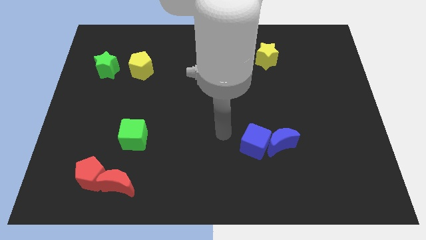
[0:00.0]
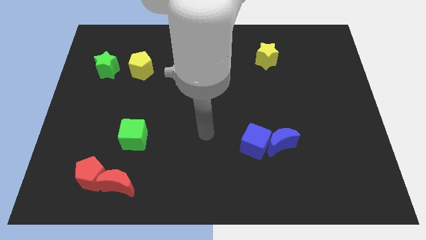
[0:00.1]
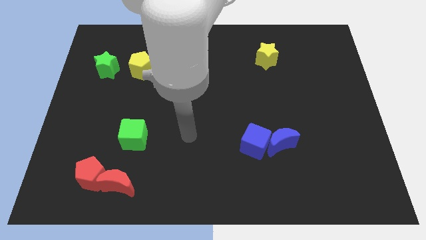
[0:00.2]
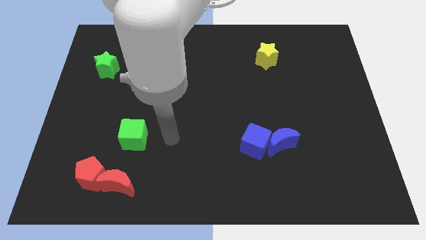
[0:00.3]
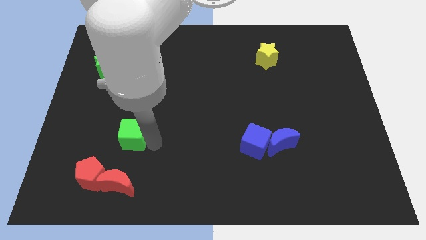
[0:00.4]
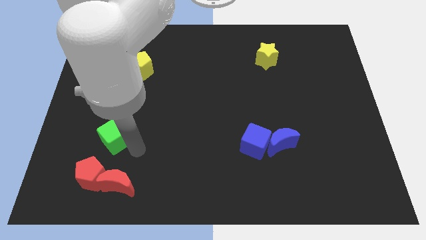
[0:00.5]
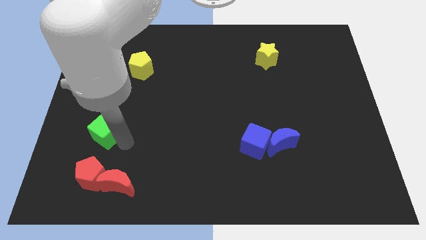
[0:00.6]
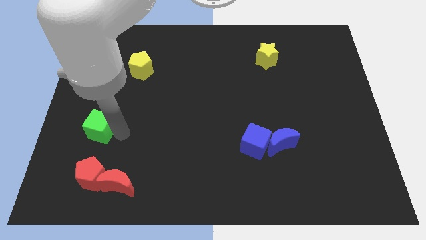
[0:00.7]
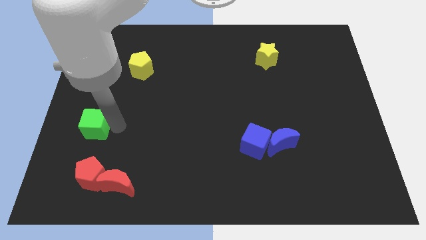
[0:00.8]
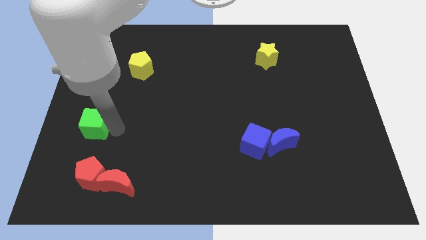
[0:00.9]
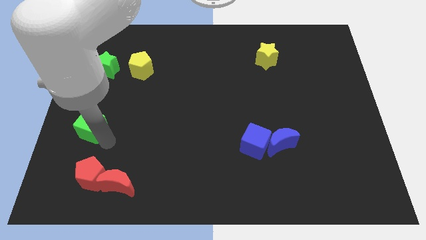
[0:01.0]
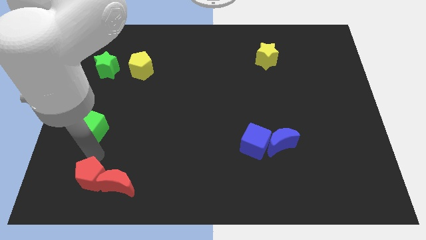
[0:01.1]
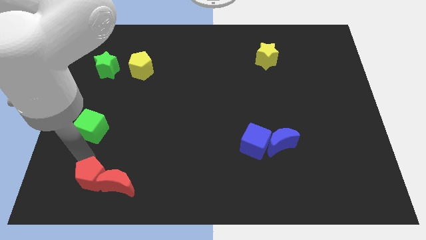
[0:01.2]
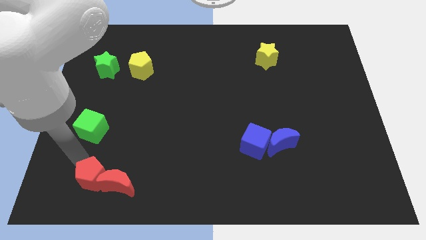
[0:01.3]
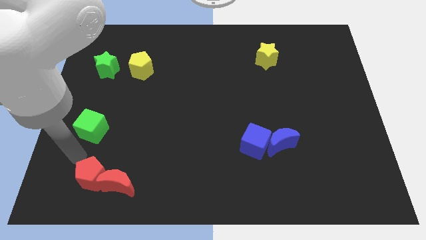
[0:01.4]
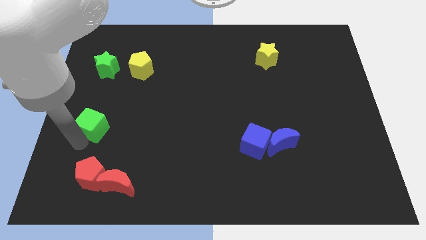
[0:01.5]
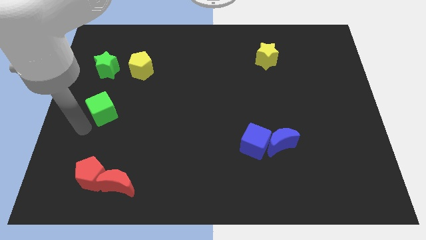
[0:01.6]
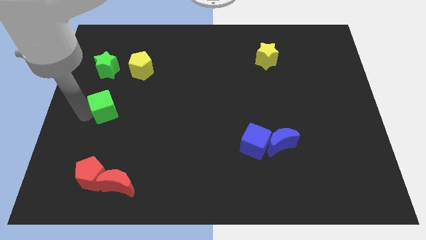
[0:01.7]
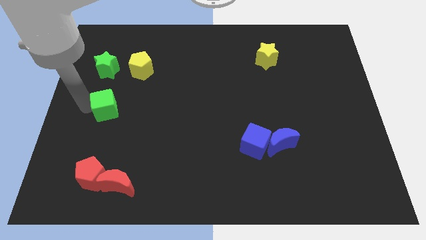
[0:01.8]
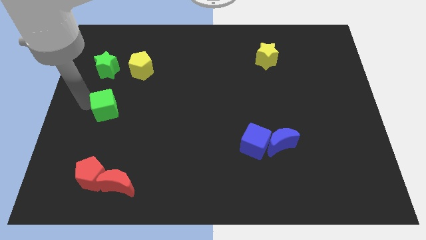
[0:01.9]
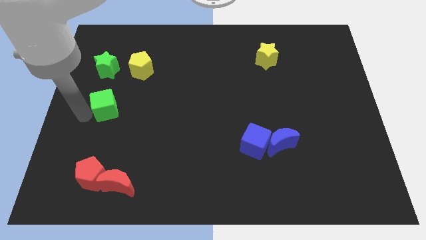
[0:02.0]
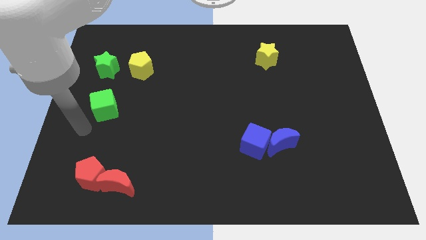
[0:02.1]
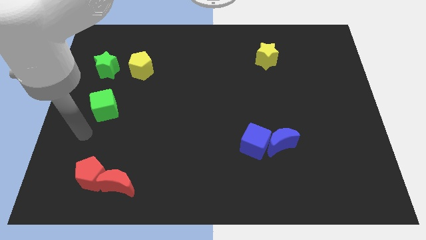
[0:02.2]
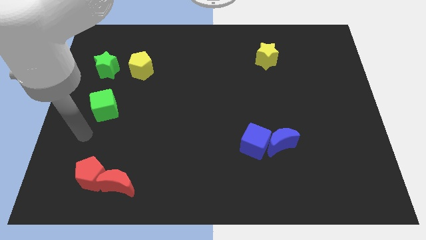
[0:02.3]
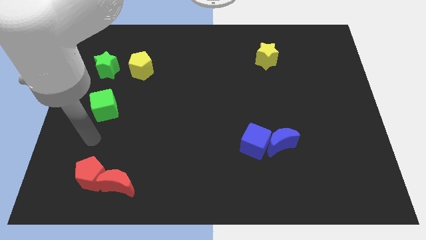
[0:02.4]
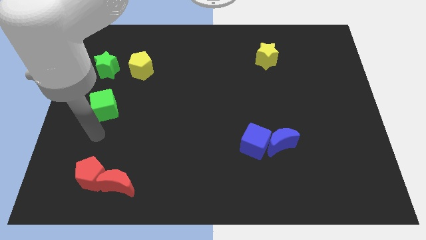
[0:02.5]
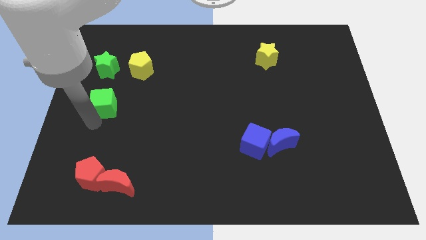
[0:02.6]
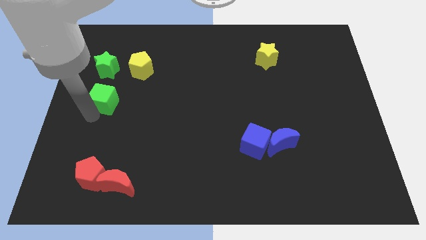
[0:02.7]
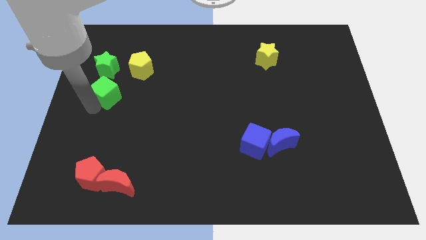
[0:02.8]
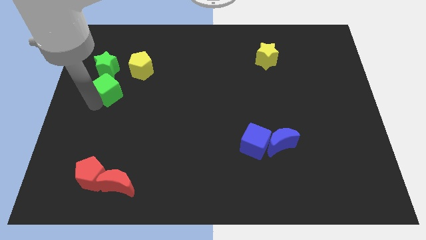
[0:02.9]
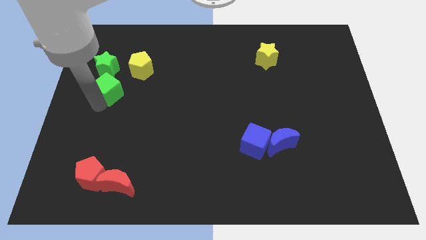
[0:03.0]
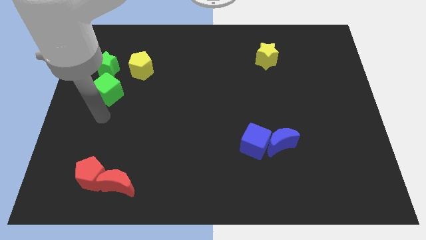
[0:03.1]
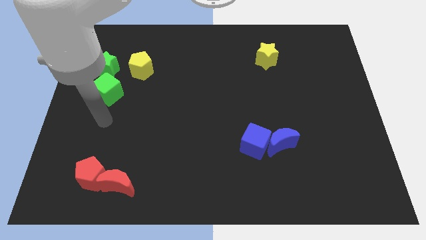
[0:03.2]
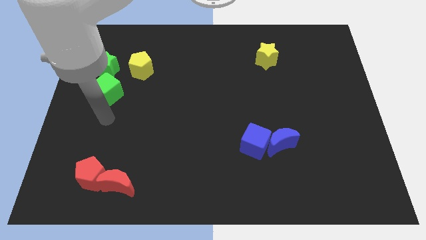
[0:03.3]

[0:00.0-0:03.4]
place the green cube below the green star

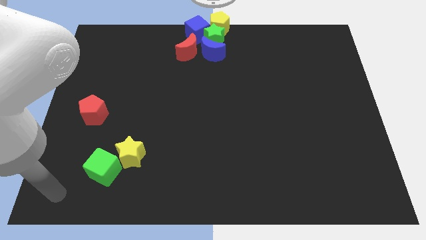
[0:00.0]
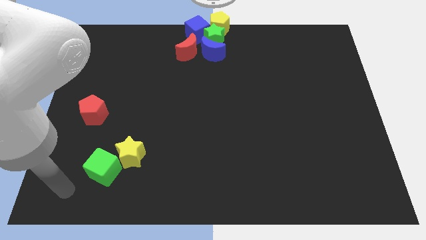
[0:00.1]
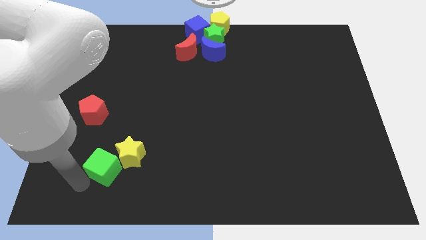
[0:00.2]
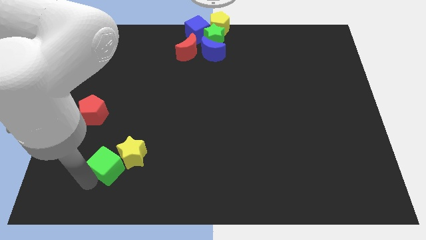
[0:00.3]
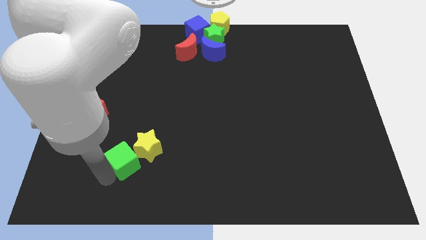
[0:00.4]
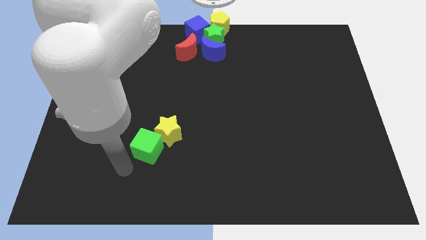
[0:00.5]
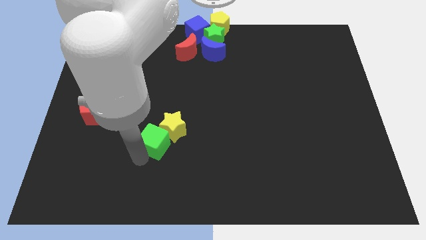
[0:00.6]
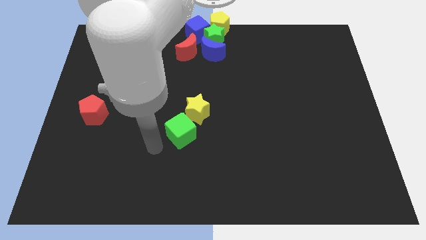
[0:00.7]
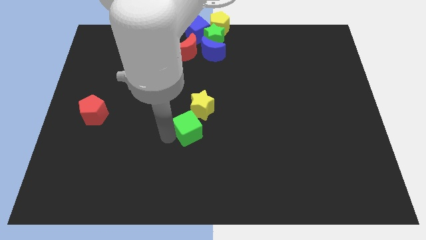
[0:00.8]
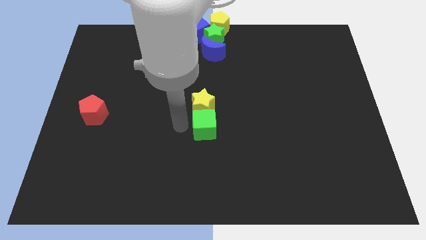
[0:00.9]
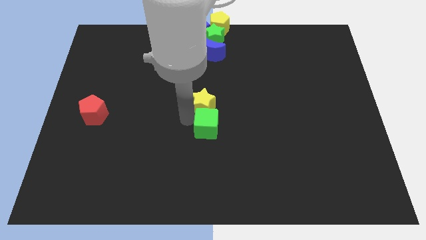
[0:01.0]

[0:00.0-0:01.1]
place green cube to the center of the board

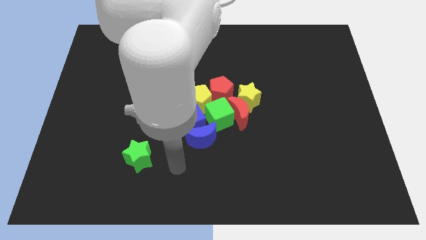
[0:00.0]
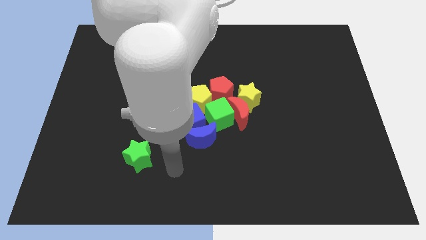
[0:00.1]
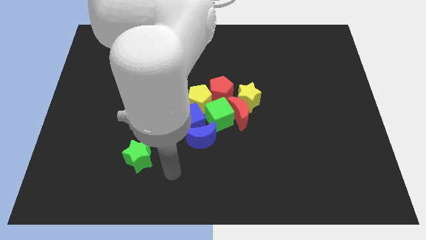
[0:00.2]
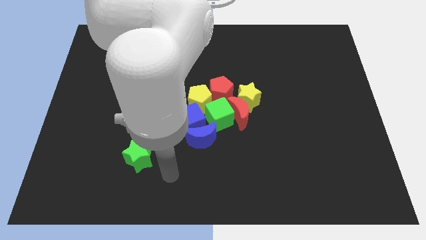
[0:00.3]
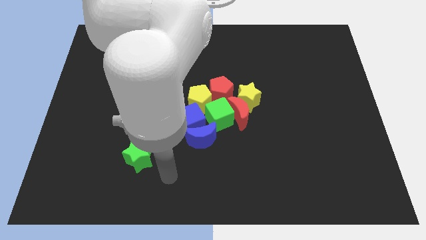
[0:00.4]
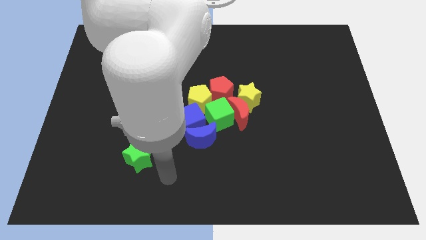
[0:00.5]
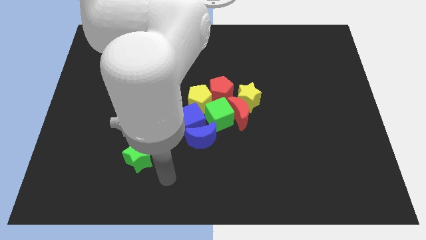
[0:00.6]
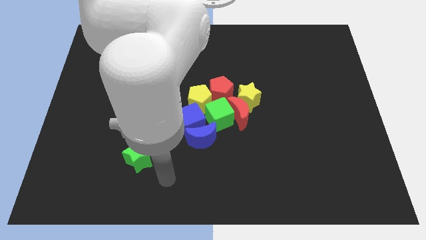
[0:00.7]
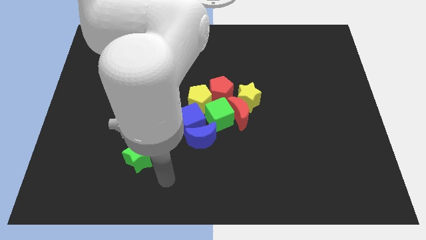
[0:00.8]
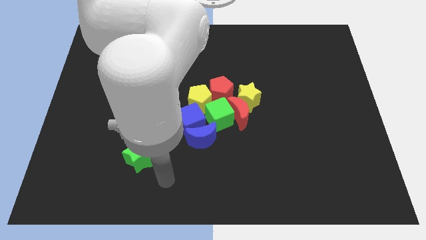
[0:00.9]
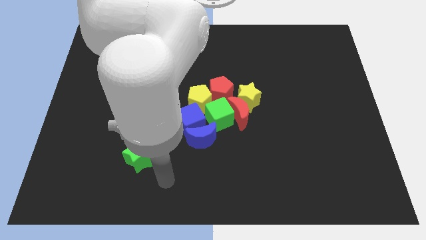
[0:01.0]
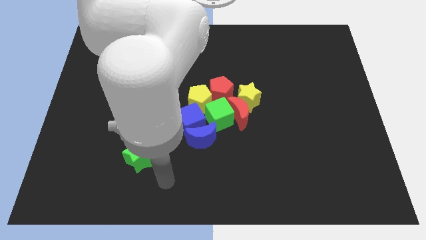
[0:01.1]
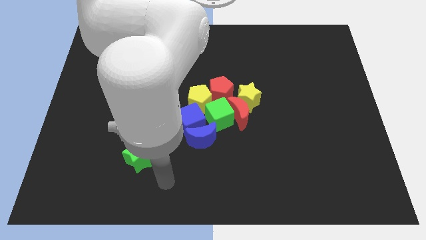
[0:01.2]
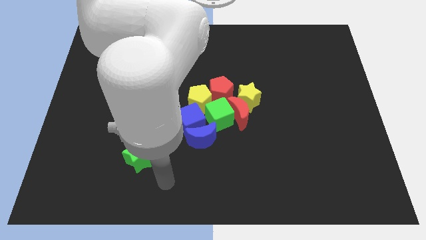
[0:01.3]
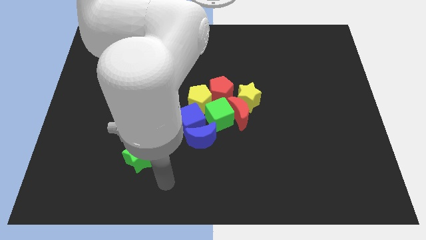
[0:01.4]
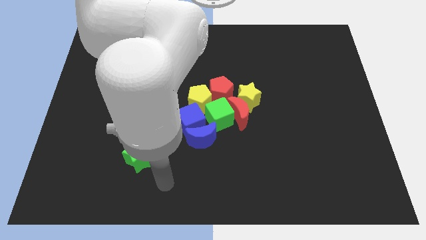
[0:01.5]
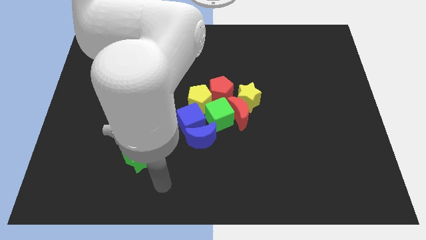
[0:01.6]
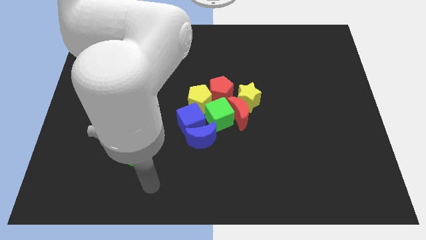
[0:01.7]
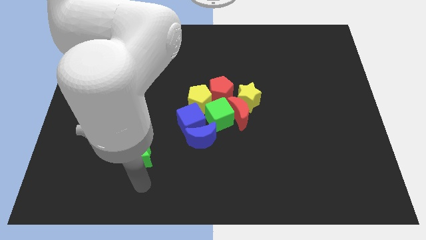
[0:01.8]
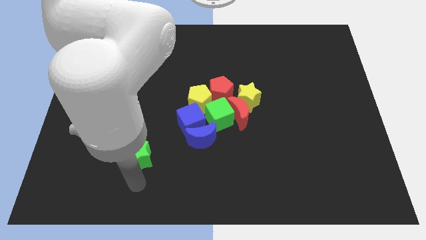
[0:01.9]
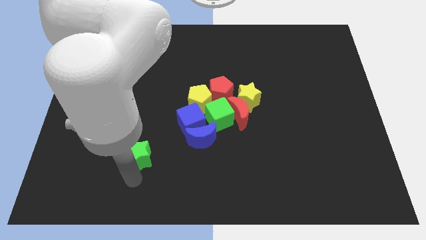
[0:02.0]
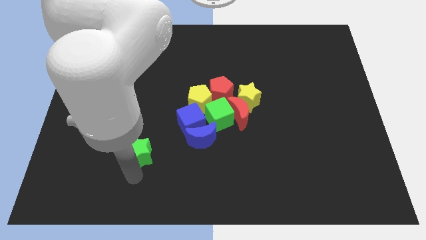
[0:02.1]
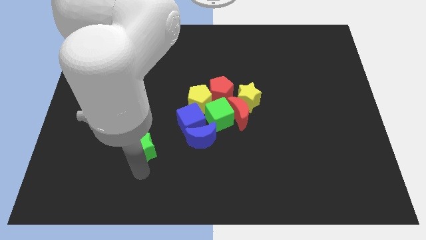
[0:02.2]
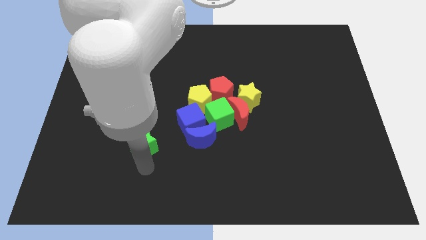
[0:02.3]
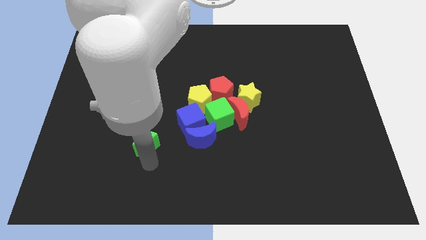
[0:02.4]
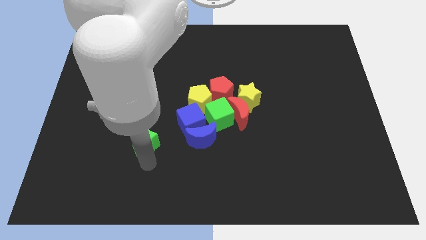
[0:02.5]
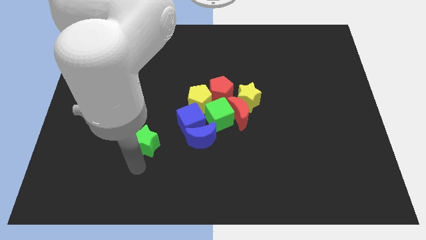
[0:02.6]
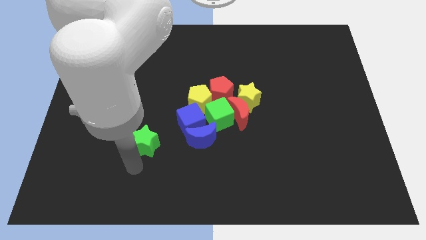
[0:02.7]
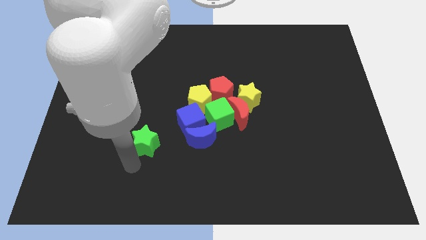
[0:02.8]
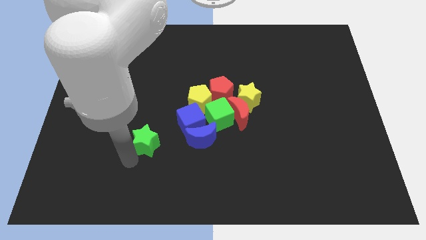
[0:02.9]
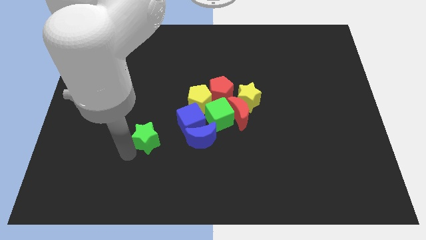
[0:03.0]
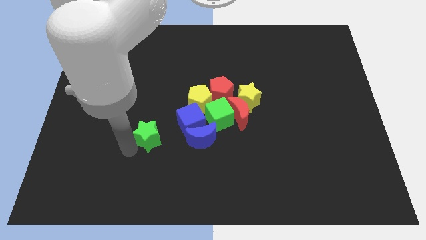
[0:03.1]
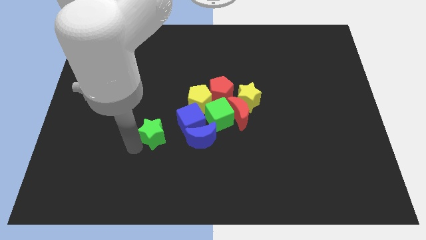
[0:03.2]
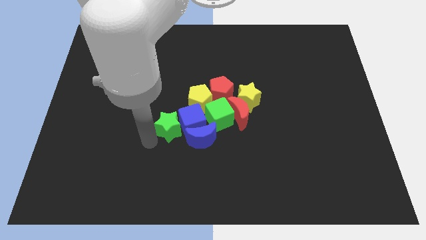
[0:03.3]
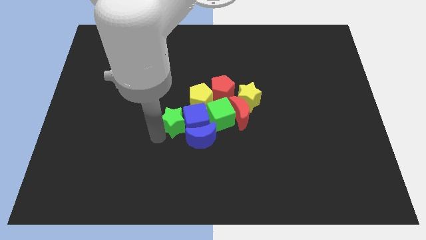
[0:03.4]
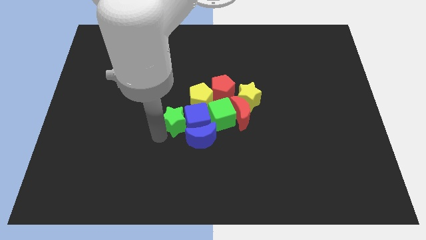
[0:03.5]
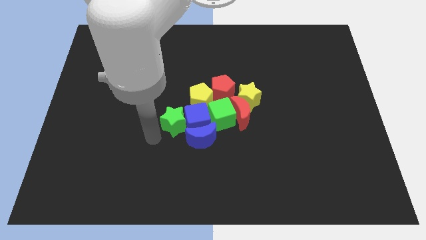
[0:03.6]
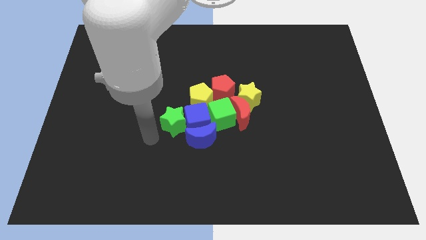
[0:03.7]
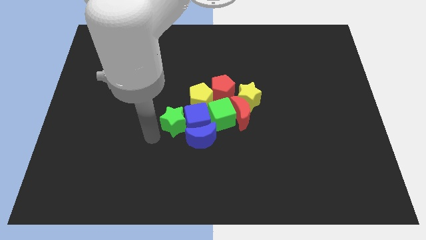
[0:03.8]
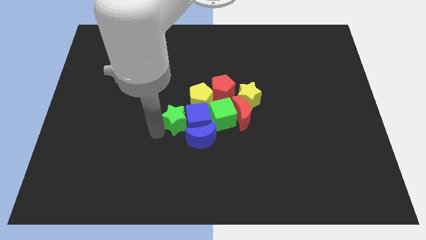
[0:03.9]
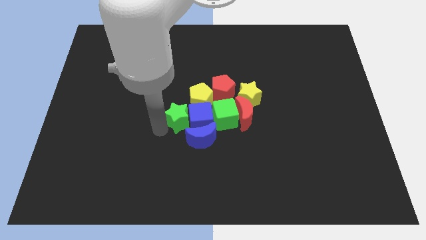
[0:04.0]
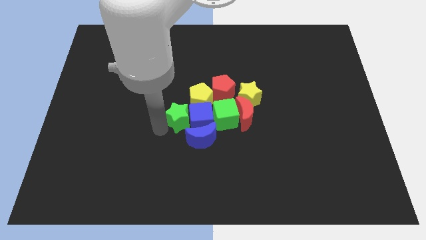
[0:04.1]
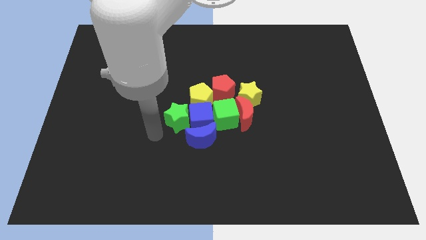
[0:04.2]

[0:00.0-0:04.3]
put the green star to left side of blue cube

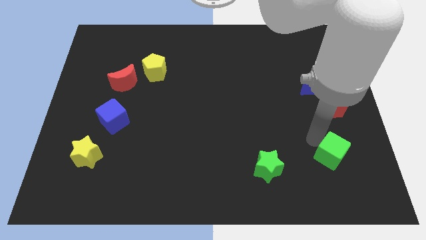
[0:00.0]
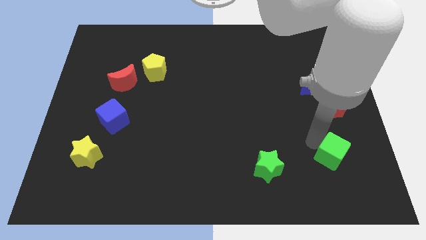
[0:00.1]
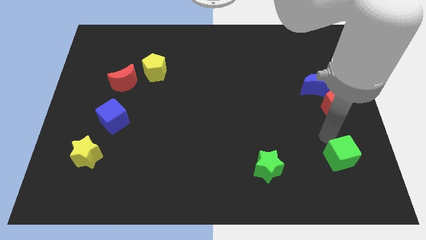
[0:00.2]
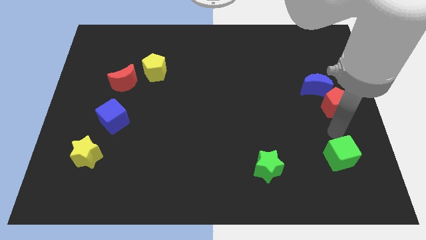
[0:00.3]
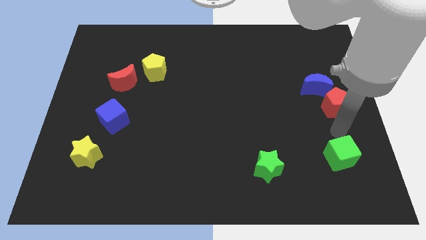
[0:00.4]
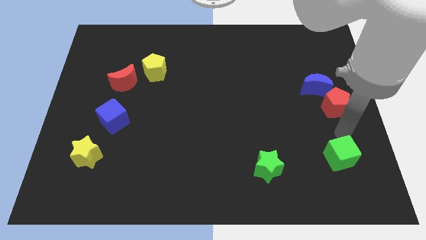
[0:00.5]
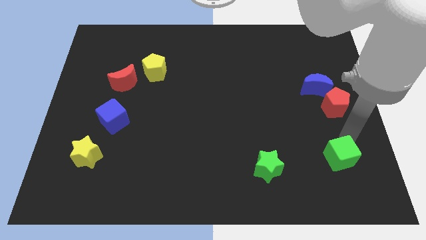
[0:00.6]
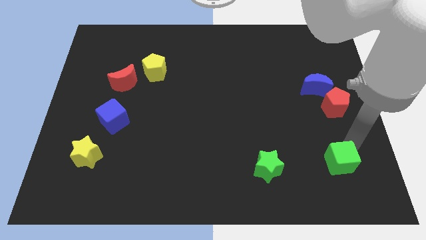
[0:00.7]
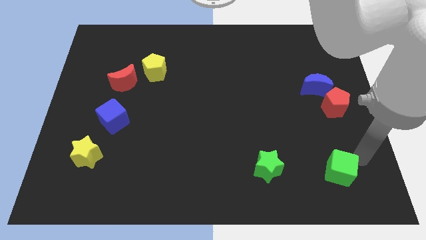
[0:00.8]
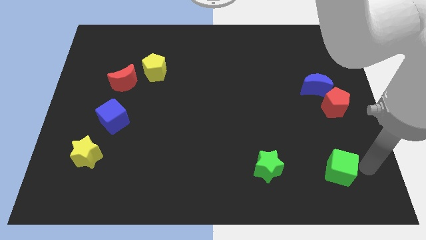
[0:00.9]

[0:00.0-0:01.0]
move green cube parallel right to green star
